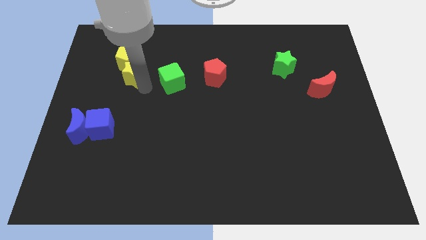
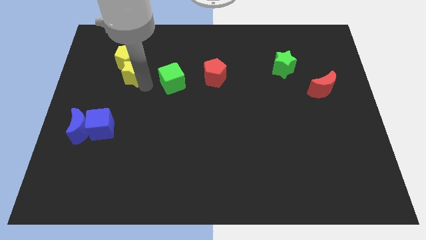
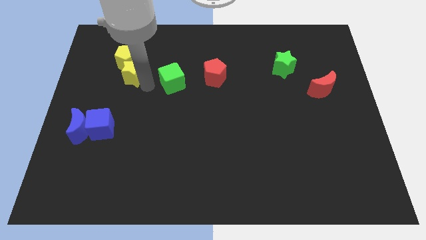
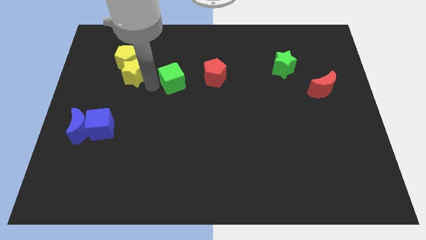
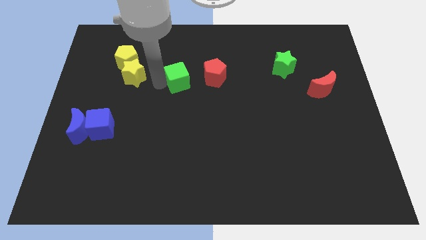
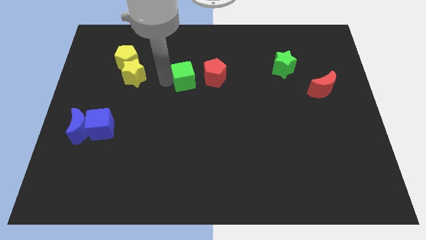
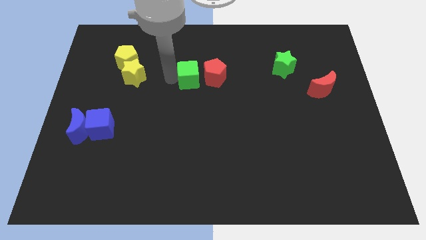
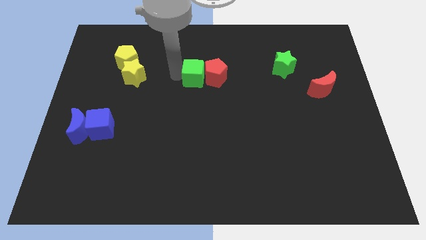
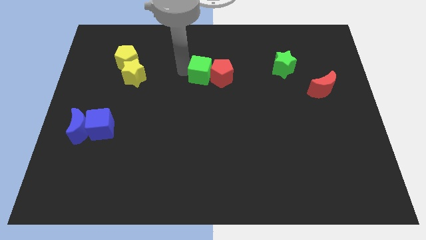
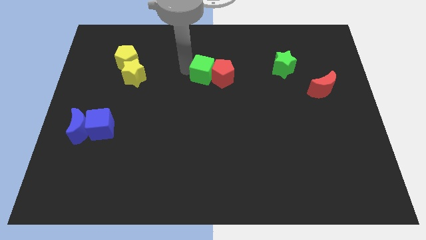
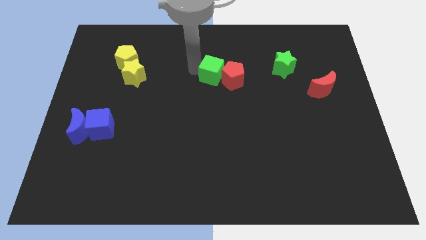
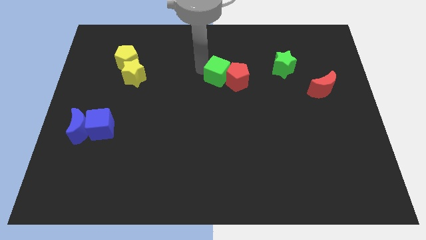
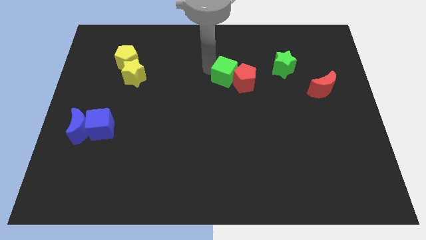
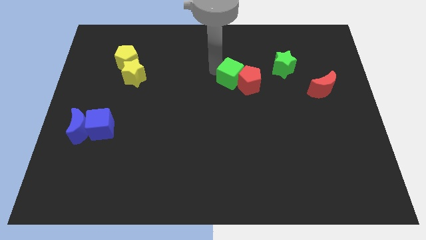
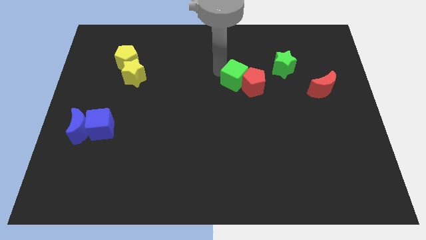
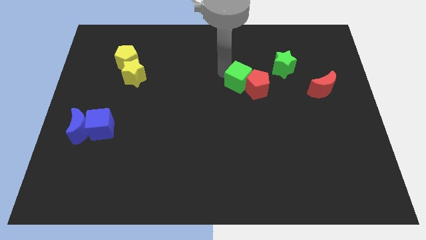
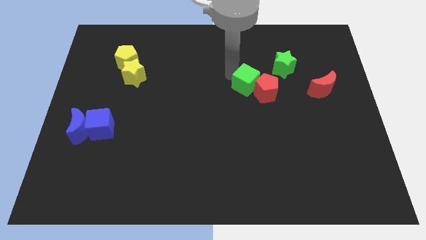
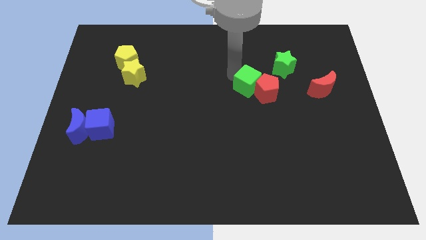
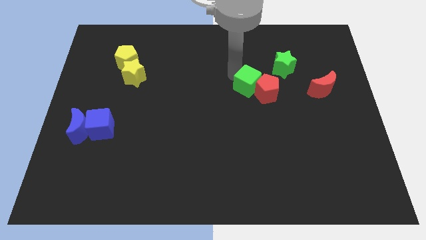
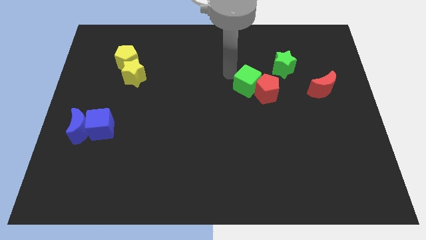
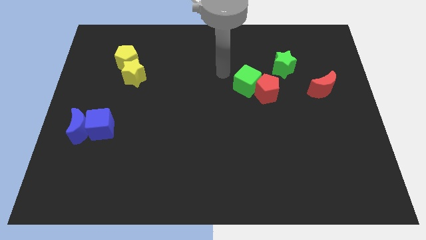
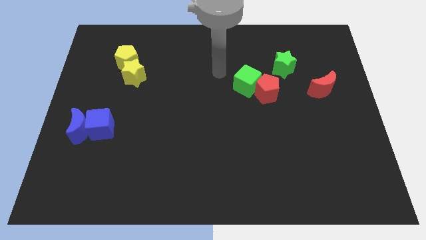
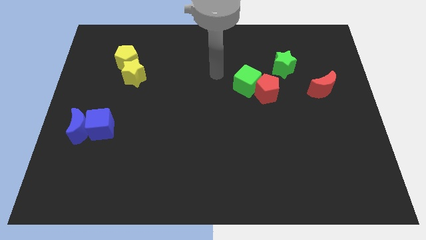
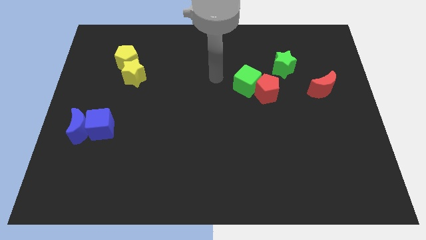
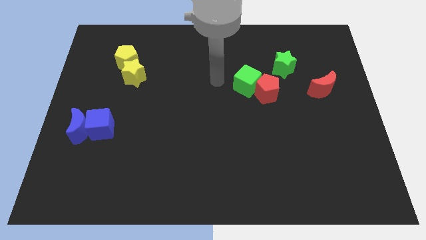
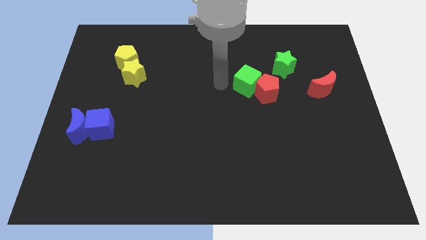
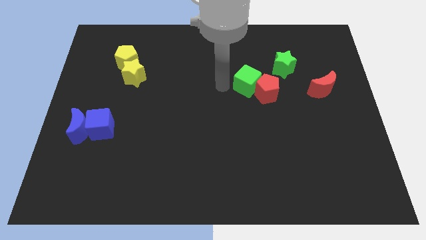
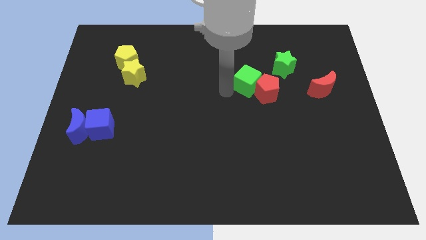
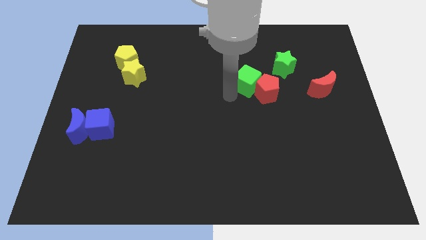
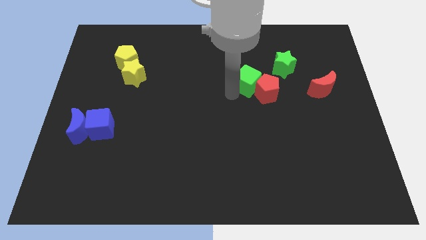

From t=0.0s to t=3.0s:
push the green cube along with red pentagon towards the right side of the board

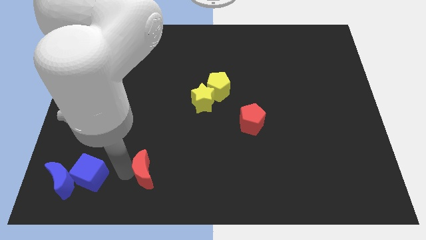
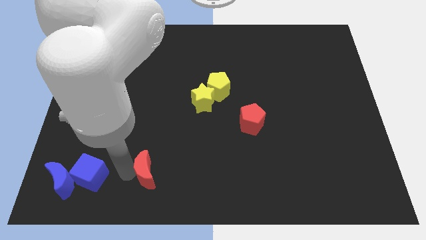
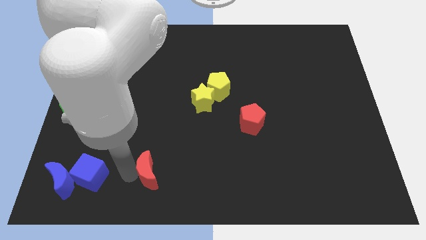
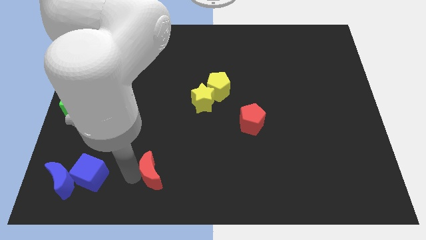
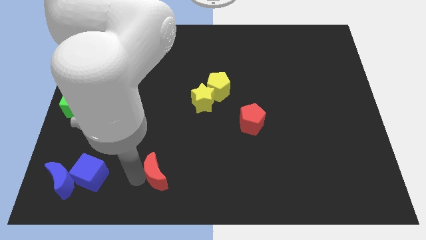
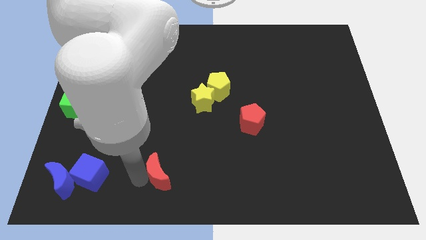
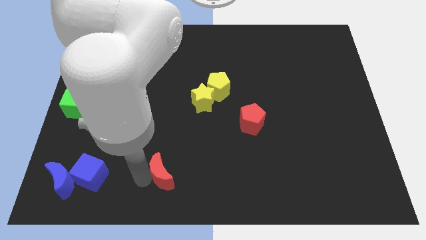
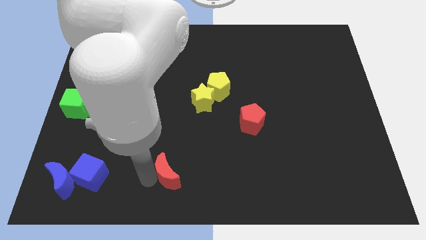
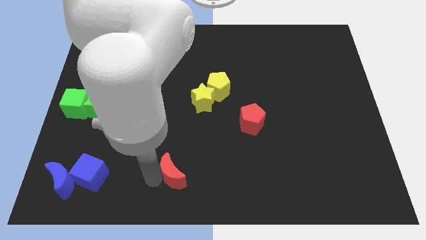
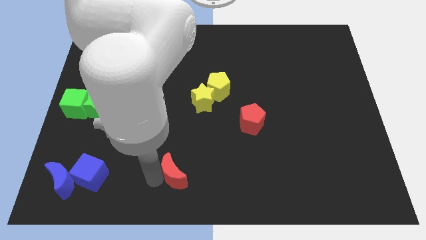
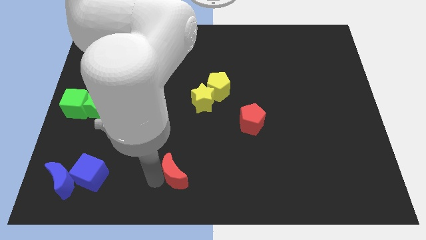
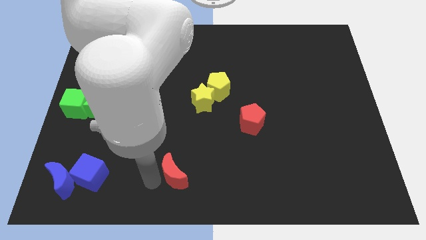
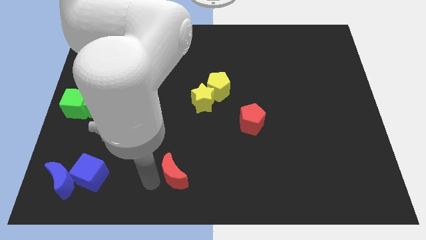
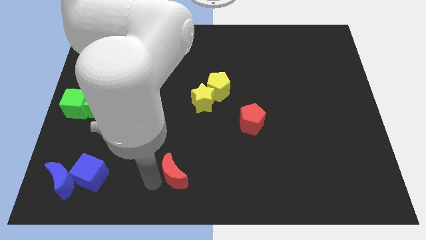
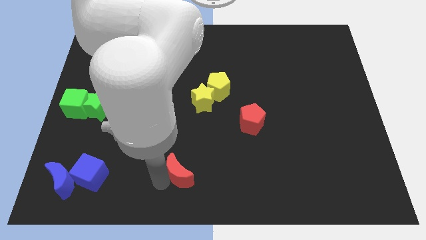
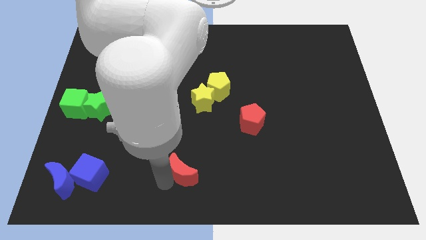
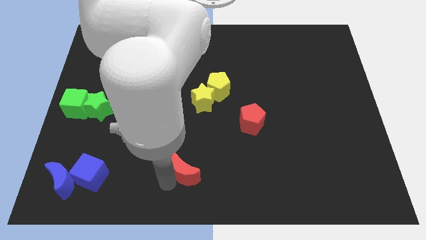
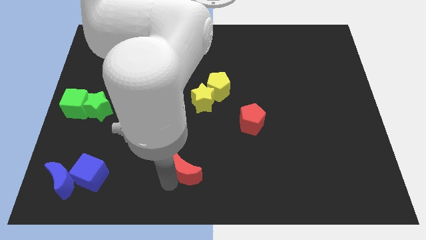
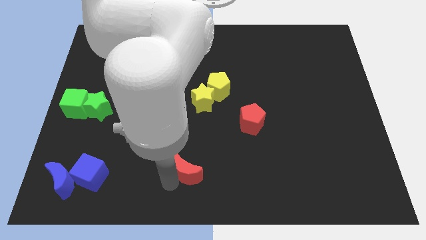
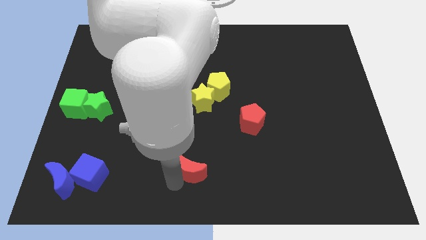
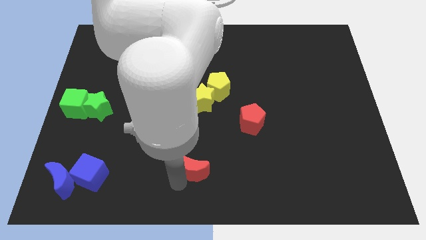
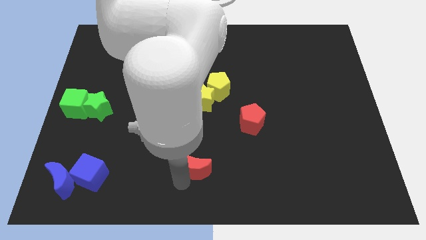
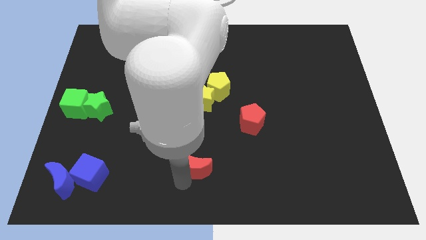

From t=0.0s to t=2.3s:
move the red crescent towards the right

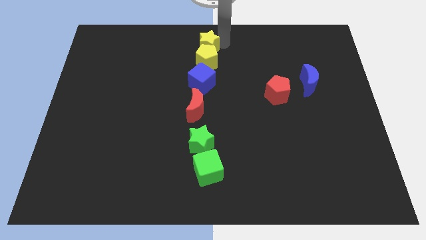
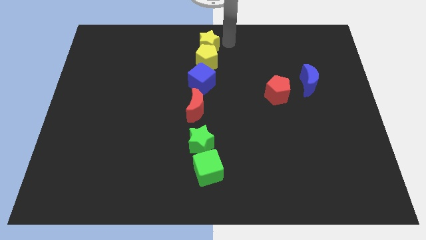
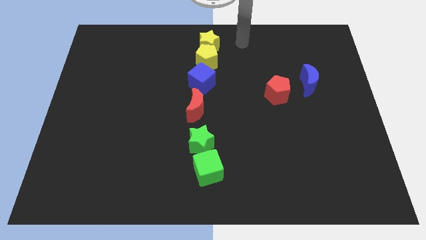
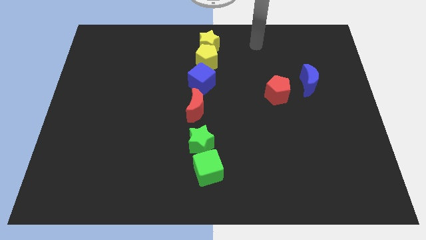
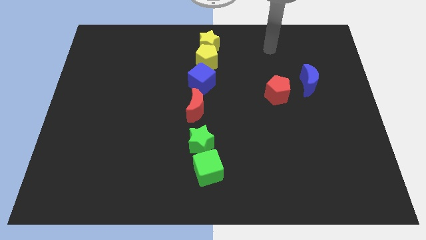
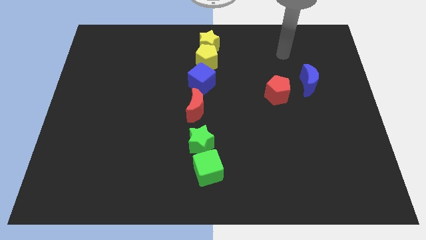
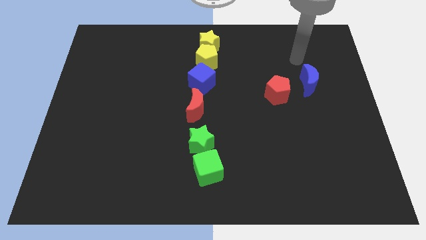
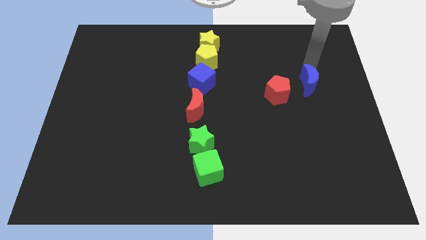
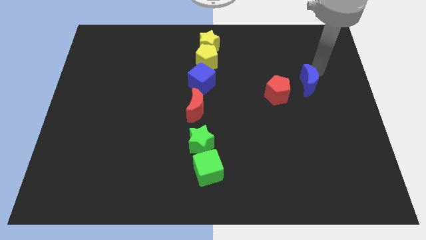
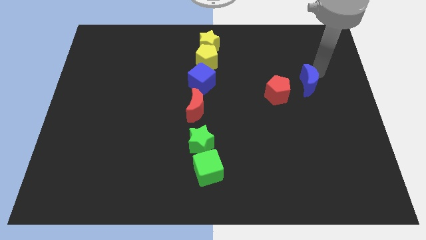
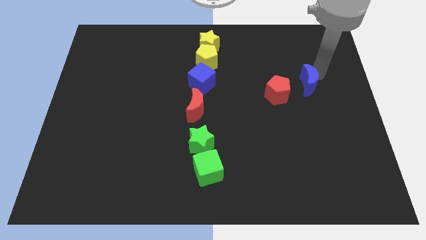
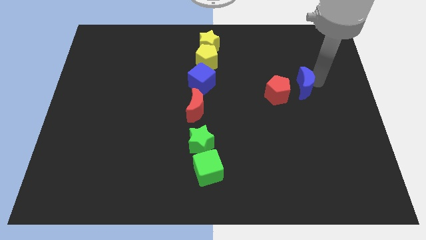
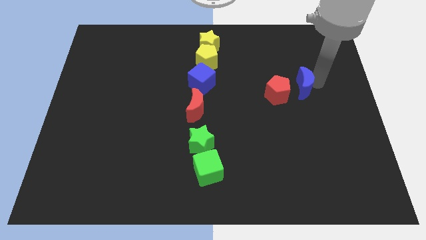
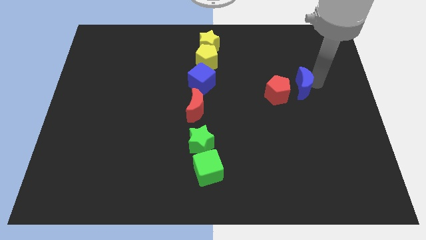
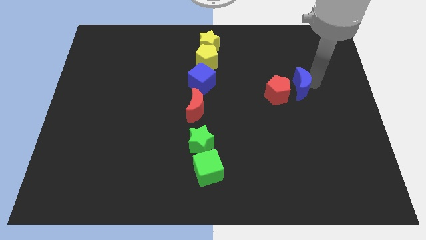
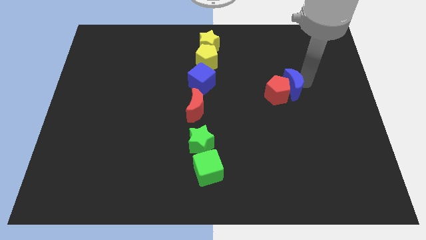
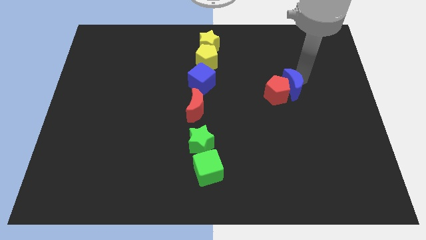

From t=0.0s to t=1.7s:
move the blue crescent close to the red pentagon

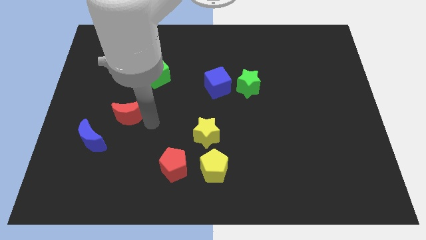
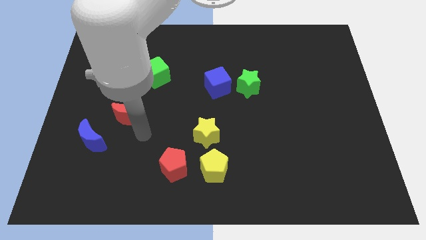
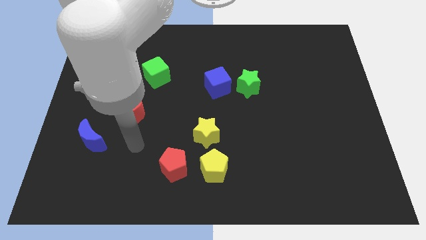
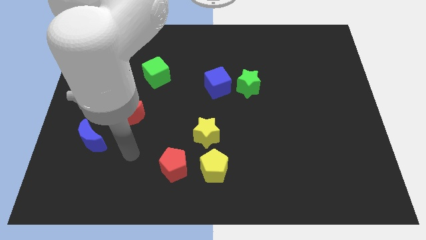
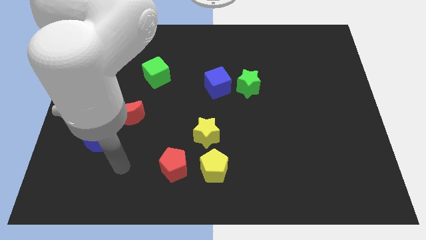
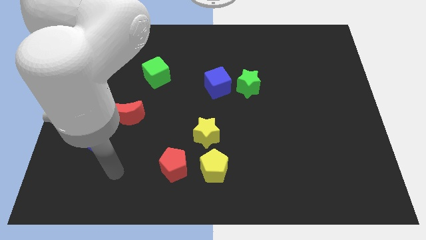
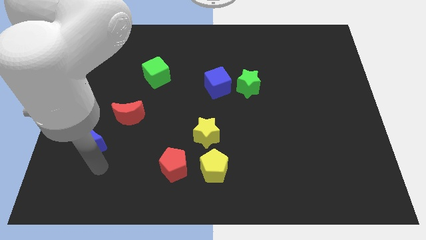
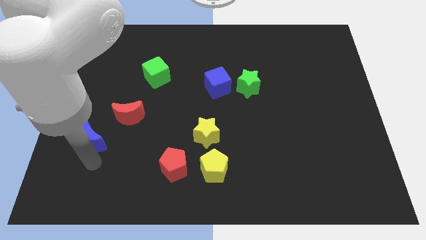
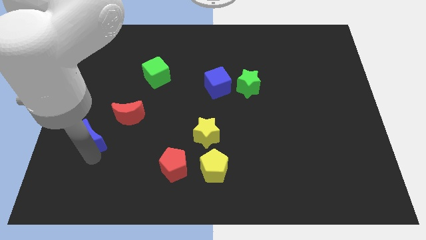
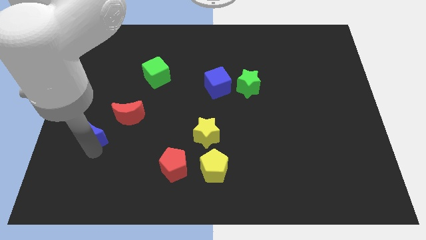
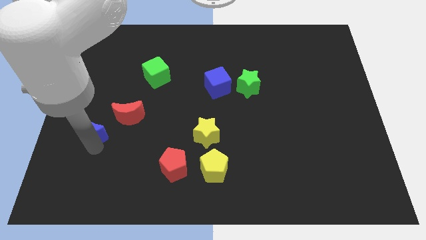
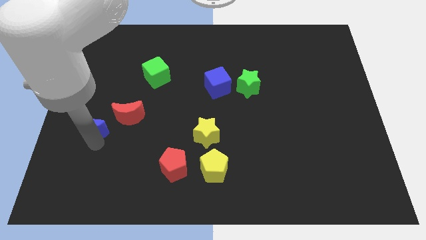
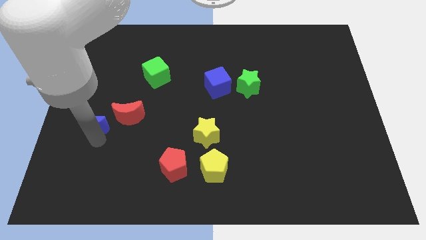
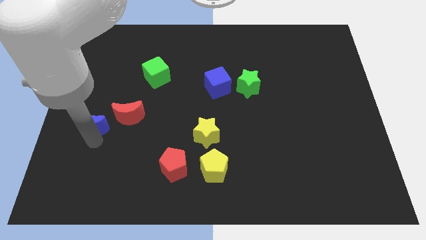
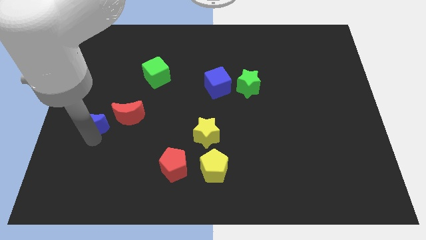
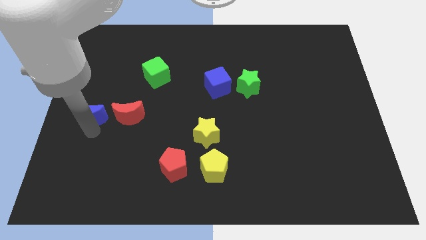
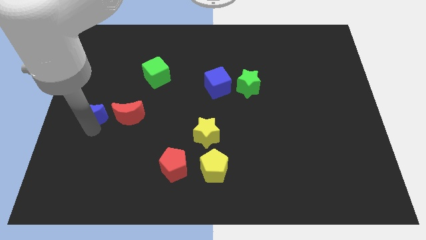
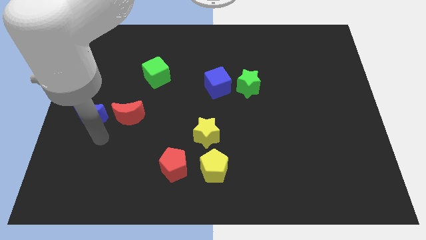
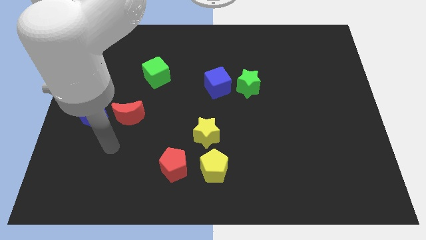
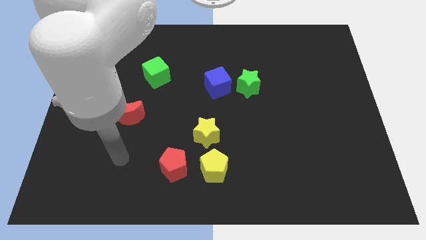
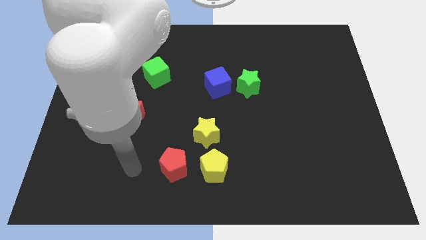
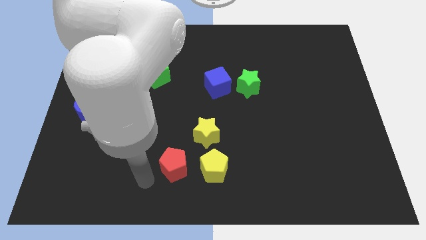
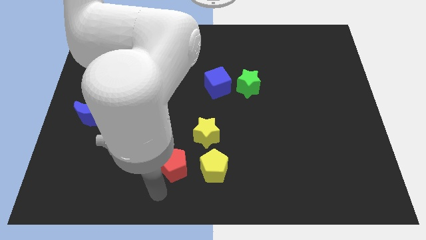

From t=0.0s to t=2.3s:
move blue crescent diagonal to the left of the red crescent
